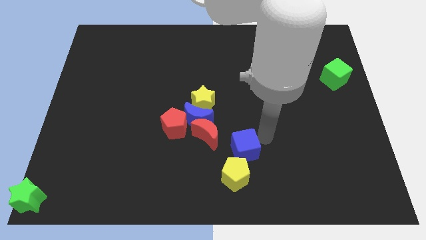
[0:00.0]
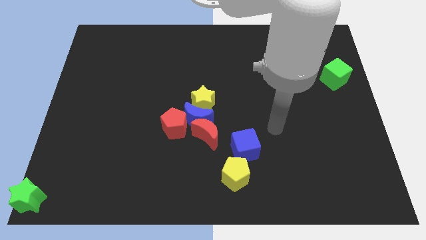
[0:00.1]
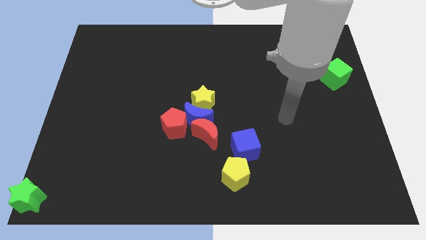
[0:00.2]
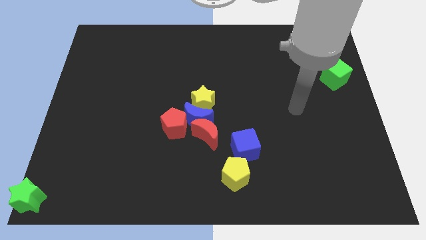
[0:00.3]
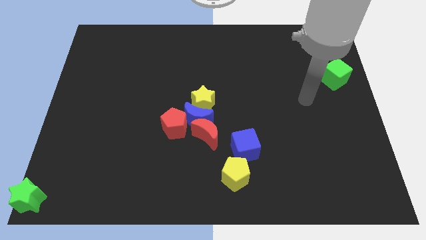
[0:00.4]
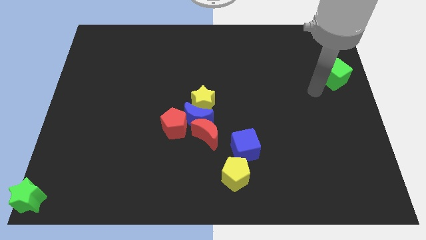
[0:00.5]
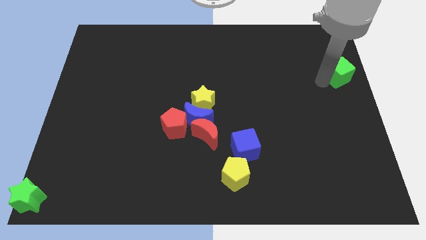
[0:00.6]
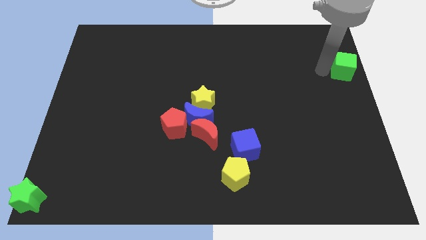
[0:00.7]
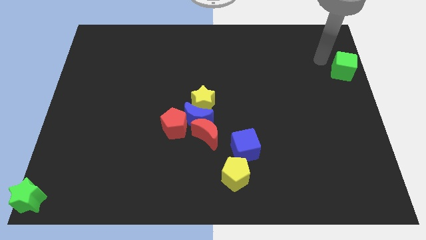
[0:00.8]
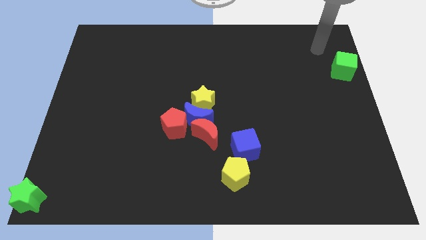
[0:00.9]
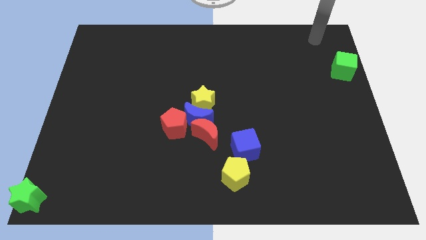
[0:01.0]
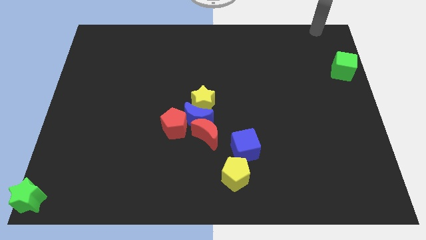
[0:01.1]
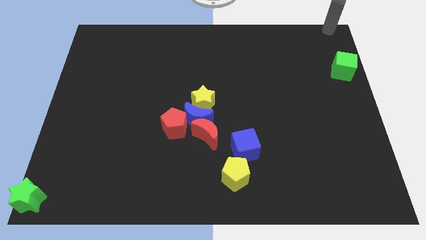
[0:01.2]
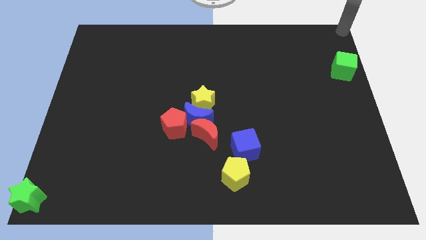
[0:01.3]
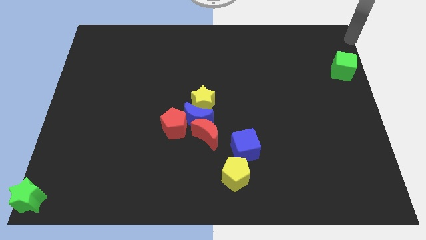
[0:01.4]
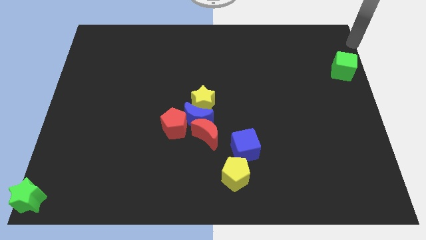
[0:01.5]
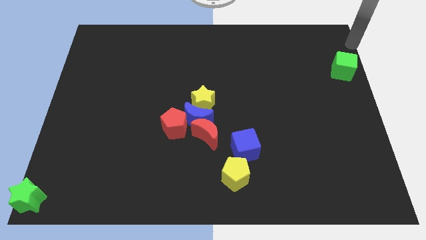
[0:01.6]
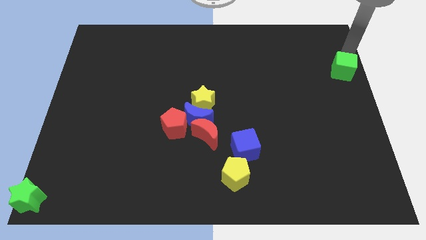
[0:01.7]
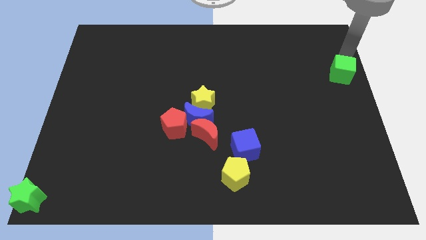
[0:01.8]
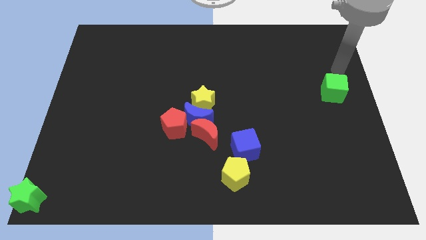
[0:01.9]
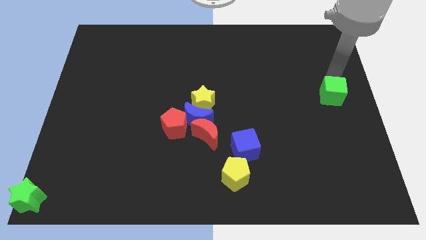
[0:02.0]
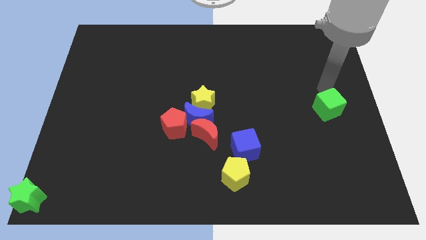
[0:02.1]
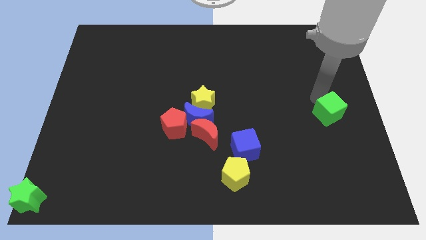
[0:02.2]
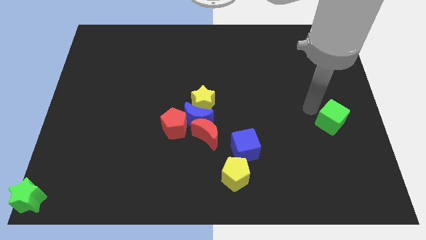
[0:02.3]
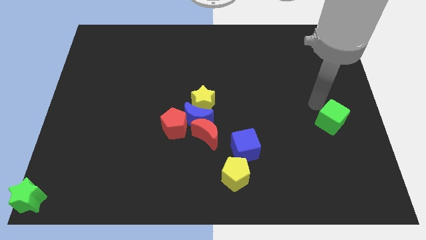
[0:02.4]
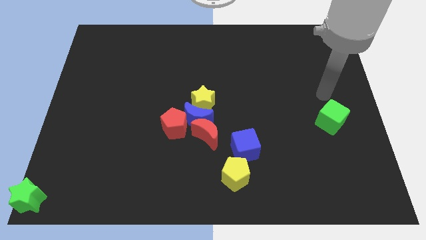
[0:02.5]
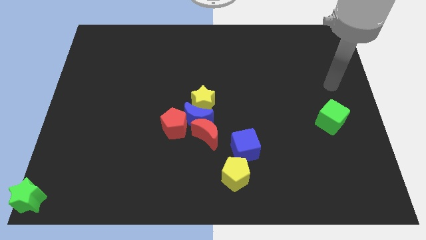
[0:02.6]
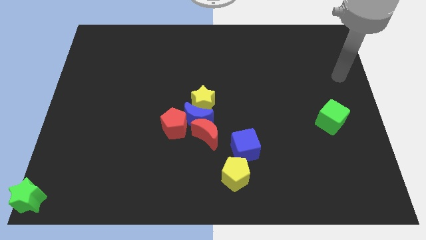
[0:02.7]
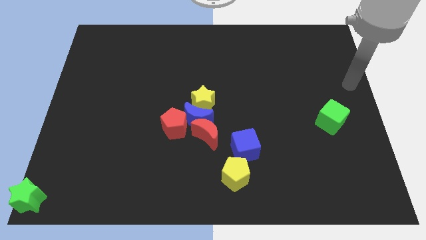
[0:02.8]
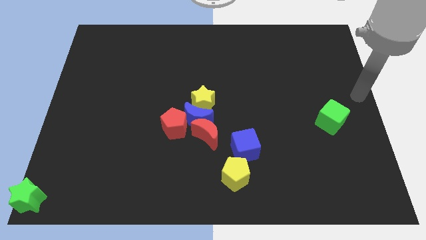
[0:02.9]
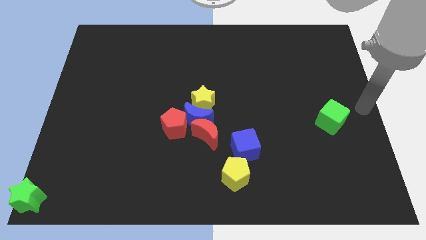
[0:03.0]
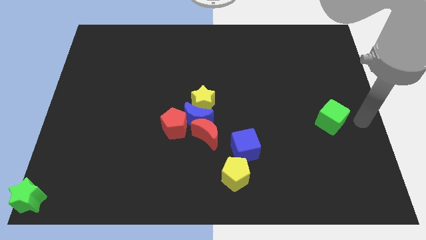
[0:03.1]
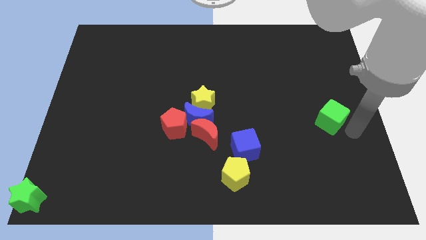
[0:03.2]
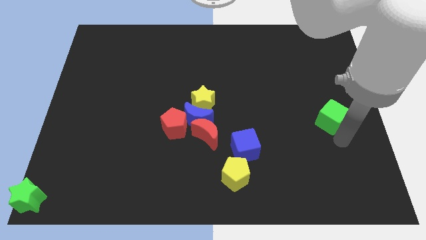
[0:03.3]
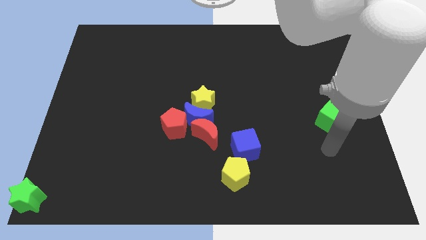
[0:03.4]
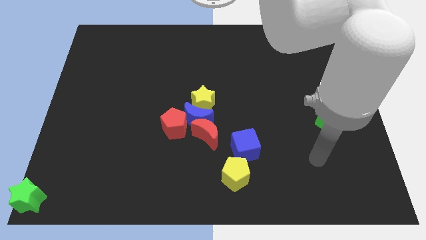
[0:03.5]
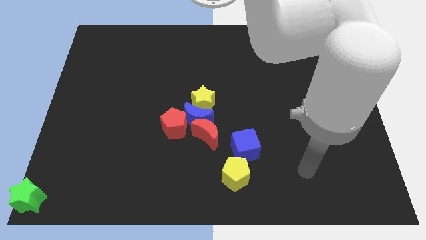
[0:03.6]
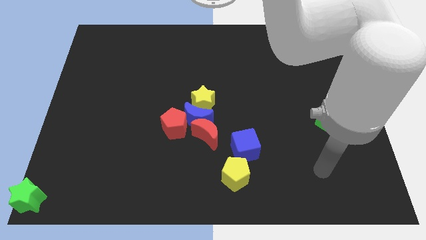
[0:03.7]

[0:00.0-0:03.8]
push the green cube towards bottom side of the board

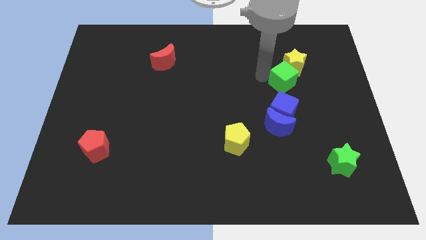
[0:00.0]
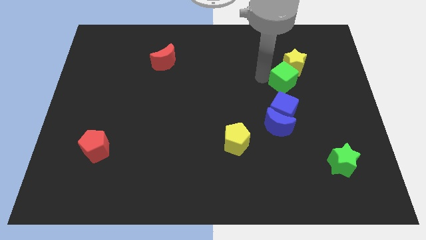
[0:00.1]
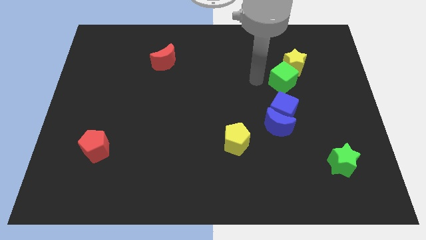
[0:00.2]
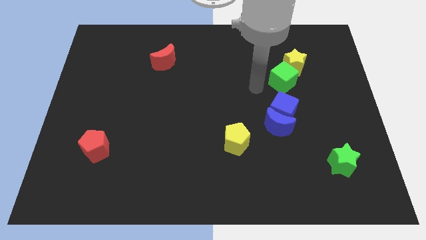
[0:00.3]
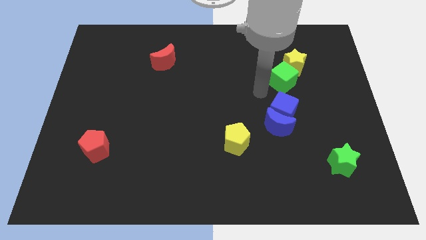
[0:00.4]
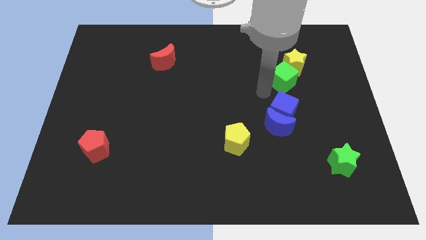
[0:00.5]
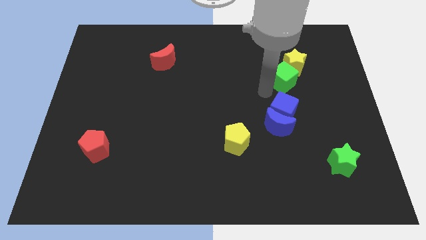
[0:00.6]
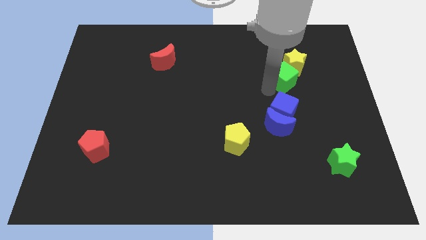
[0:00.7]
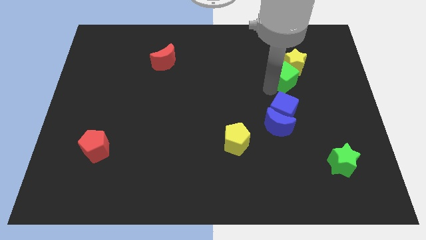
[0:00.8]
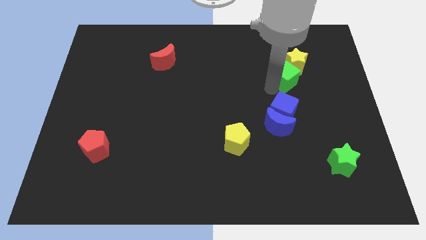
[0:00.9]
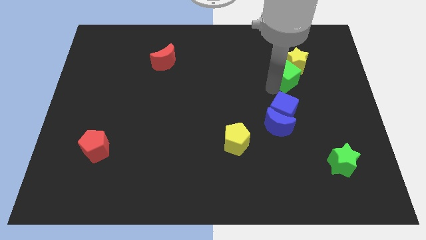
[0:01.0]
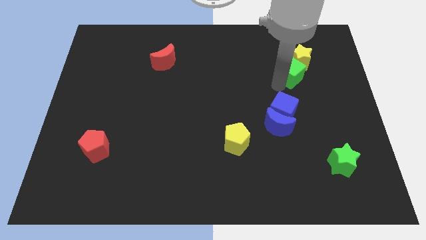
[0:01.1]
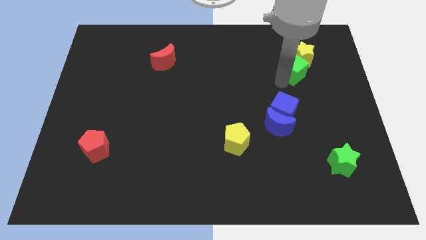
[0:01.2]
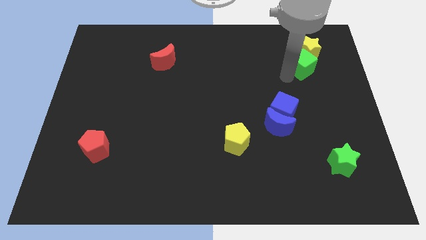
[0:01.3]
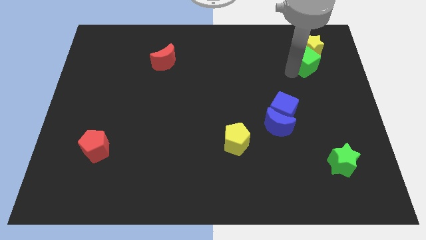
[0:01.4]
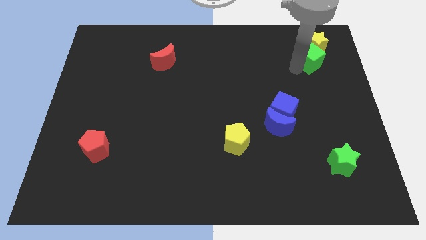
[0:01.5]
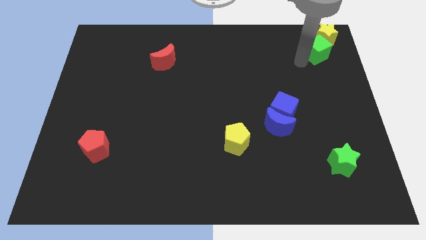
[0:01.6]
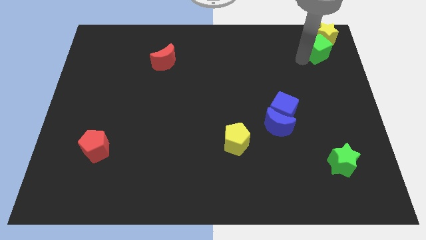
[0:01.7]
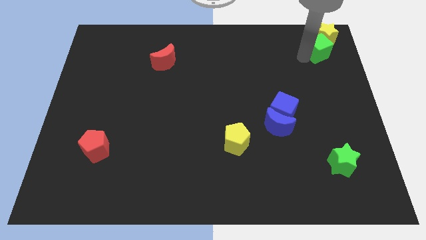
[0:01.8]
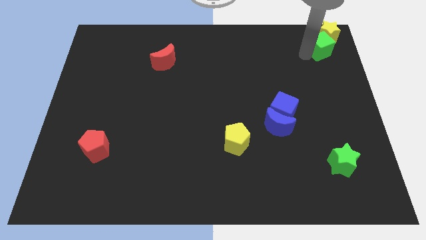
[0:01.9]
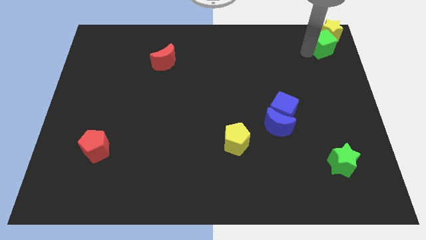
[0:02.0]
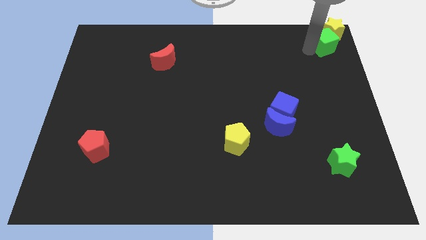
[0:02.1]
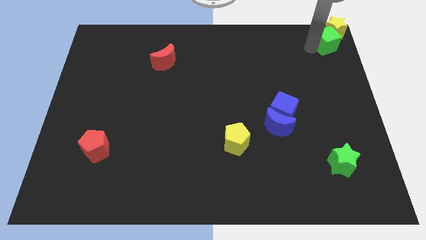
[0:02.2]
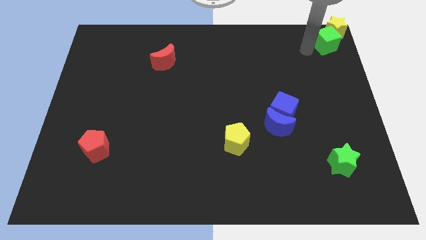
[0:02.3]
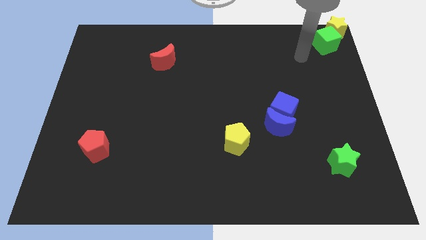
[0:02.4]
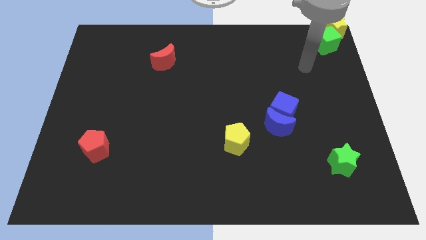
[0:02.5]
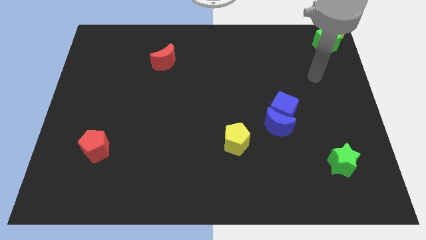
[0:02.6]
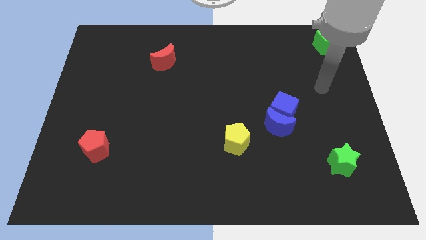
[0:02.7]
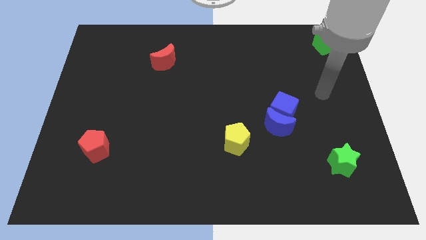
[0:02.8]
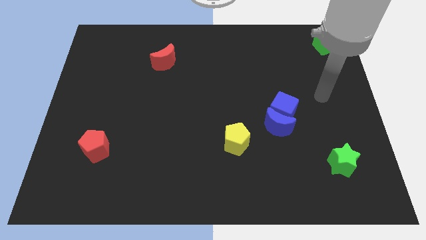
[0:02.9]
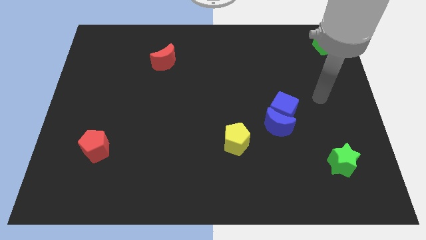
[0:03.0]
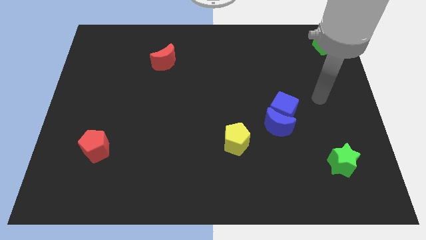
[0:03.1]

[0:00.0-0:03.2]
push the green cube and yellow star to the top right side of the board

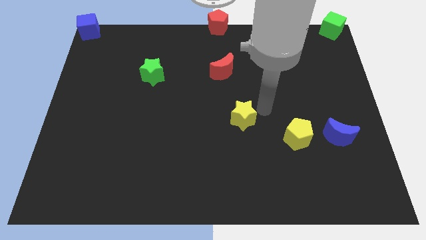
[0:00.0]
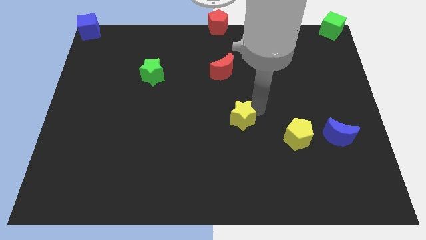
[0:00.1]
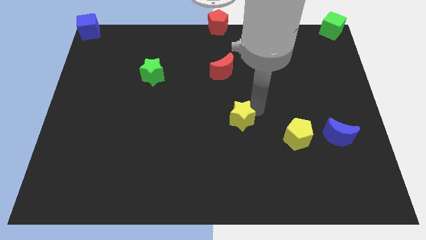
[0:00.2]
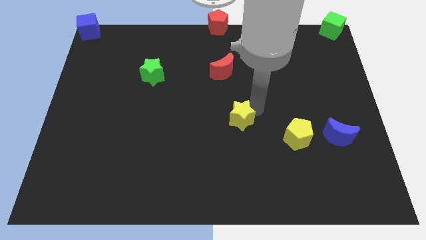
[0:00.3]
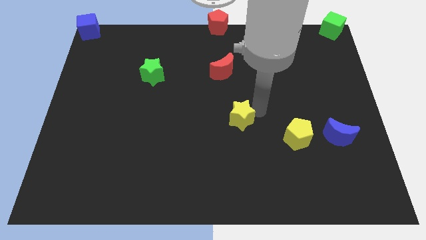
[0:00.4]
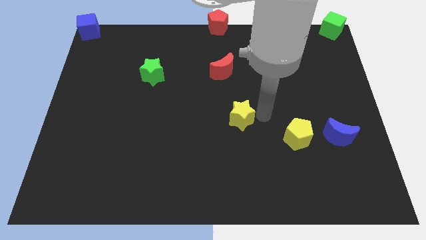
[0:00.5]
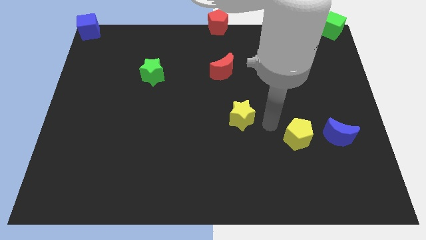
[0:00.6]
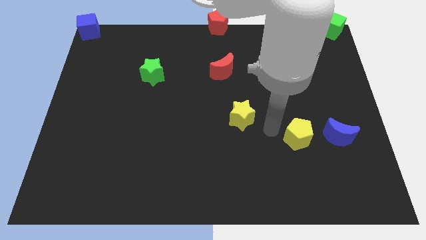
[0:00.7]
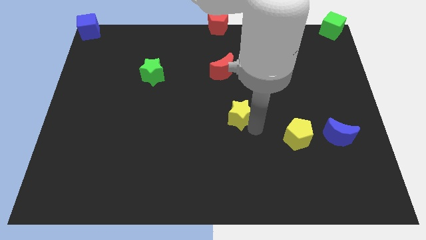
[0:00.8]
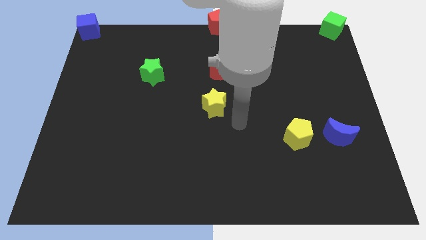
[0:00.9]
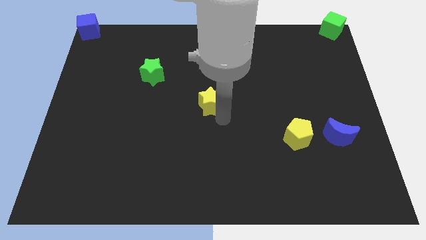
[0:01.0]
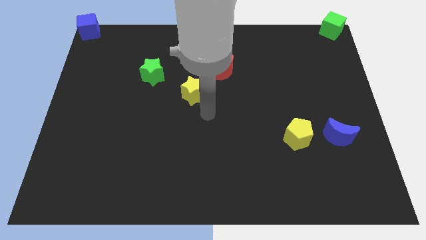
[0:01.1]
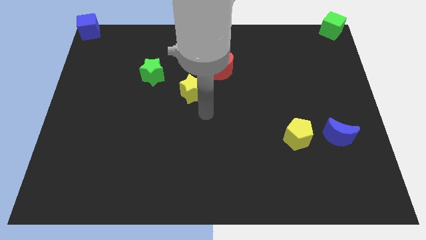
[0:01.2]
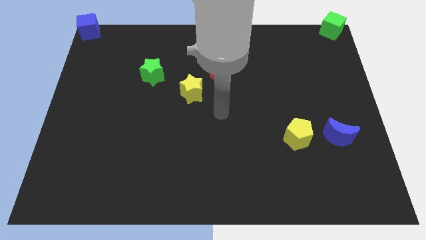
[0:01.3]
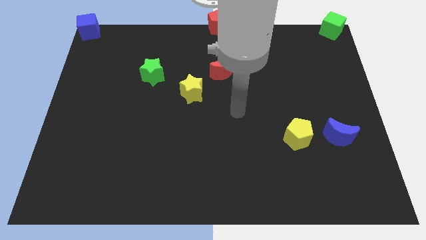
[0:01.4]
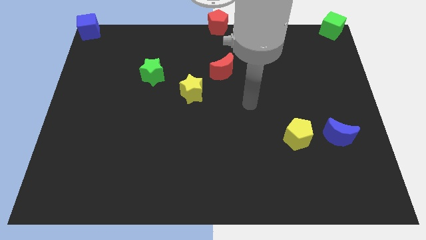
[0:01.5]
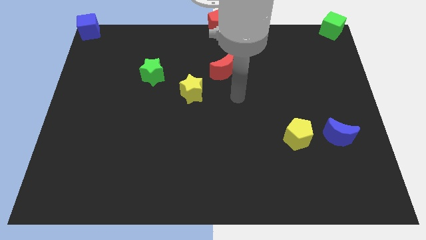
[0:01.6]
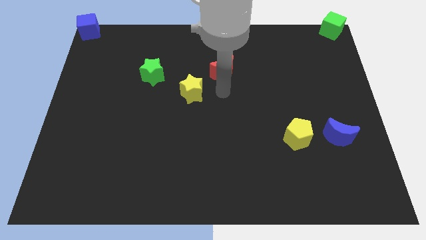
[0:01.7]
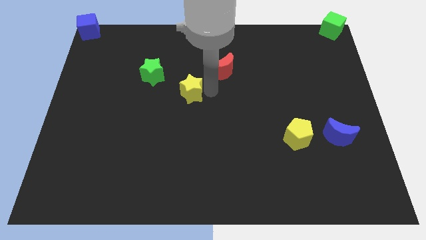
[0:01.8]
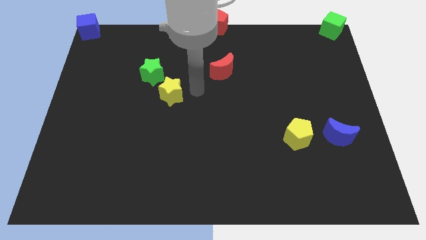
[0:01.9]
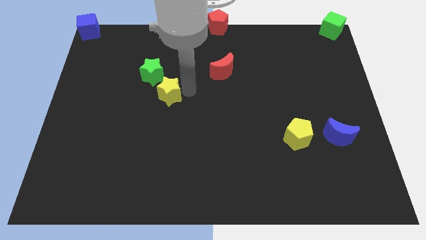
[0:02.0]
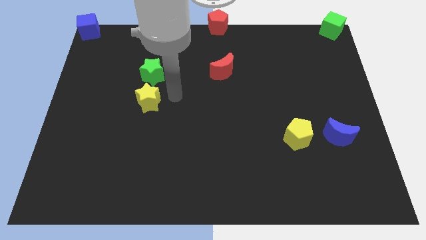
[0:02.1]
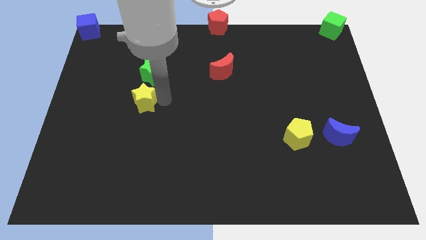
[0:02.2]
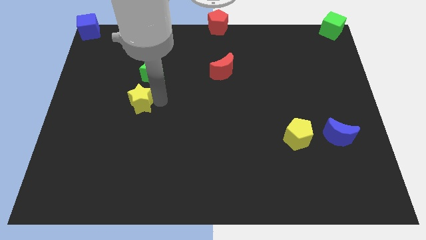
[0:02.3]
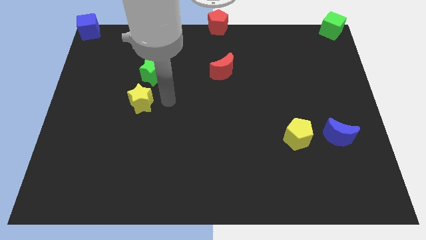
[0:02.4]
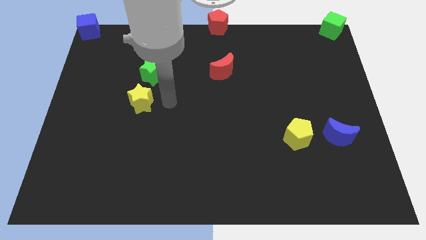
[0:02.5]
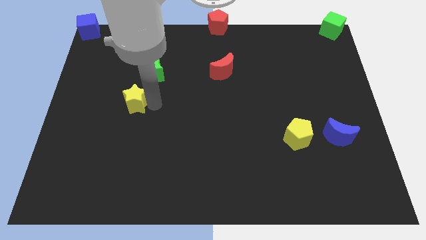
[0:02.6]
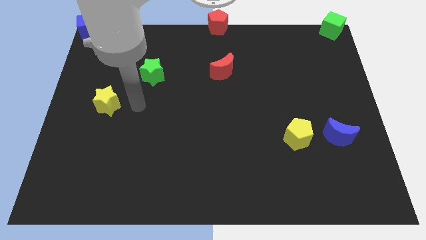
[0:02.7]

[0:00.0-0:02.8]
place the yellow star diagonally bottom left to the green star
